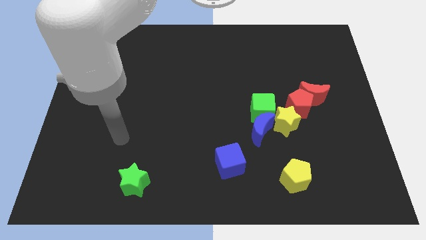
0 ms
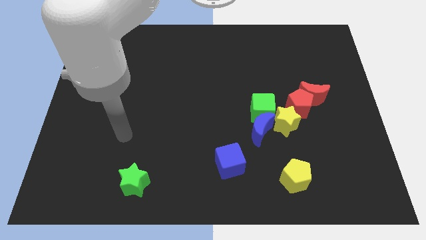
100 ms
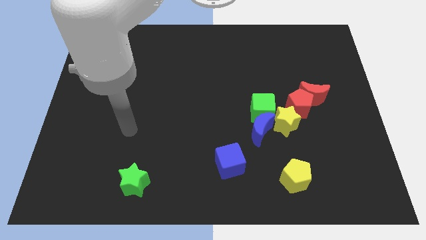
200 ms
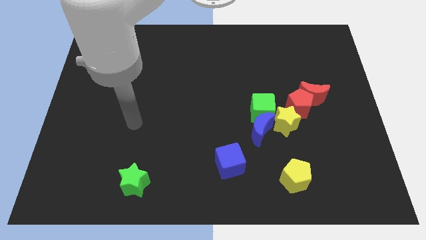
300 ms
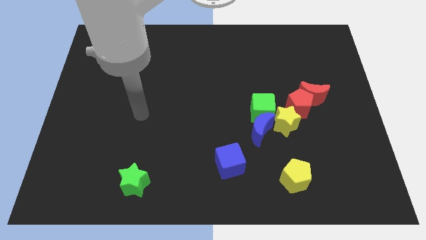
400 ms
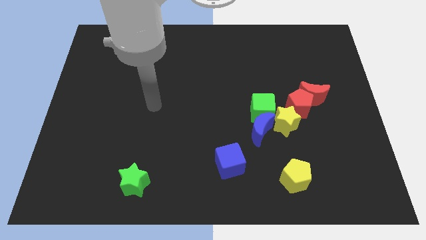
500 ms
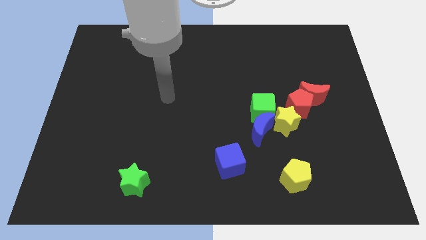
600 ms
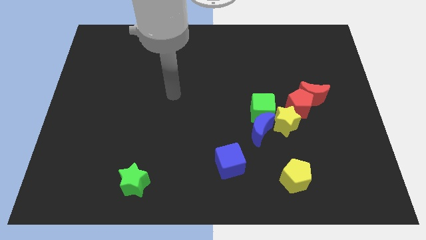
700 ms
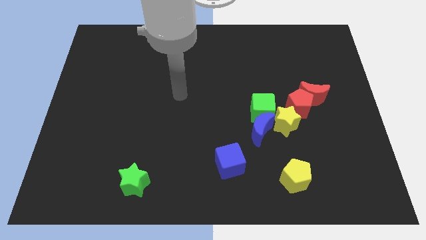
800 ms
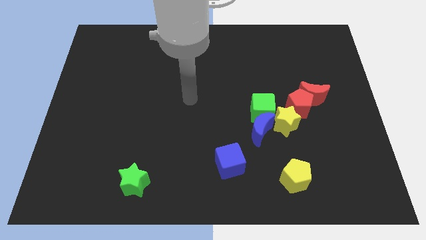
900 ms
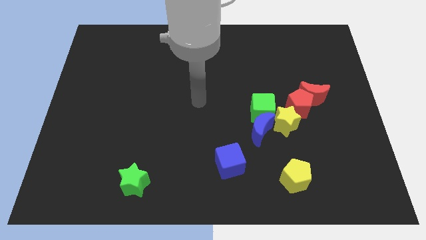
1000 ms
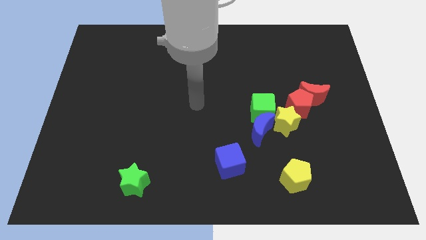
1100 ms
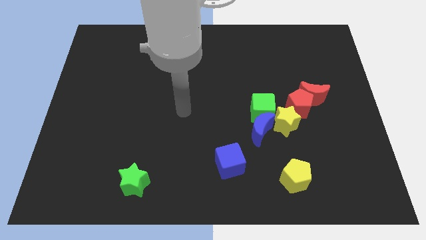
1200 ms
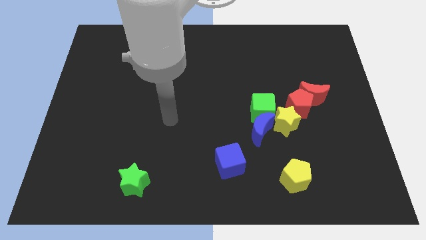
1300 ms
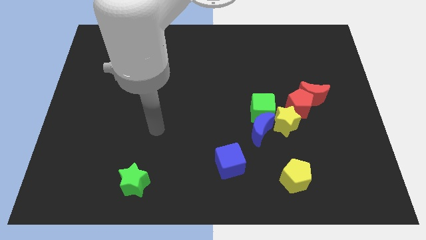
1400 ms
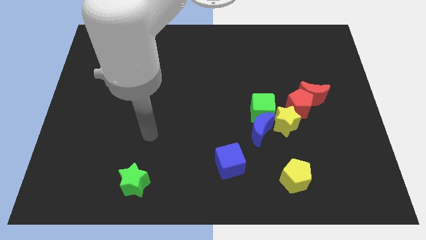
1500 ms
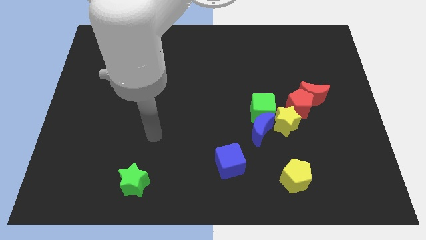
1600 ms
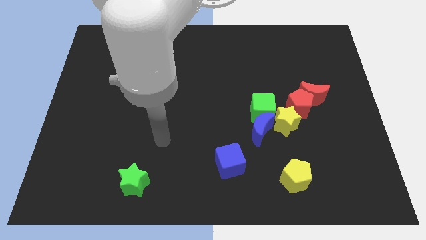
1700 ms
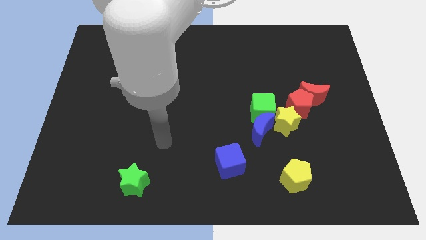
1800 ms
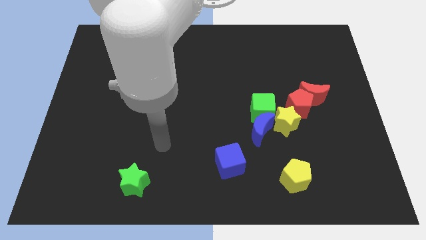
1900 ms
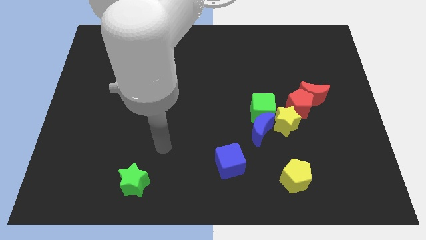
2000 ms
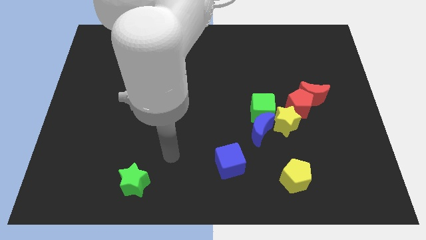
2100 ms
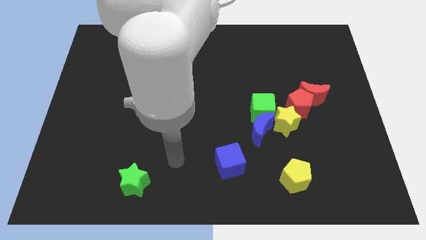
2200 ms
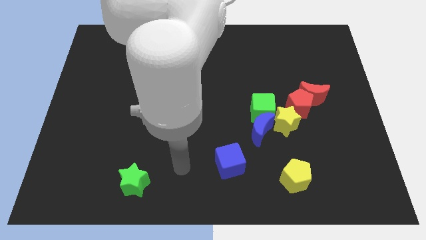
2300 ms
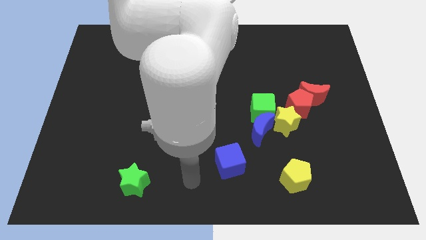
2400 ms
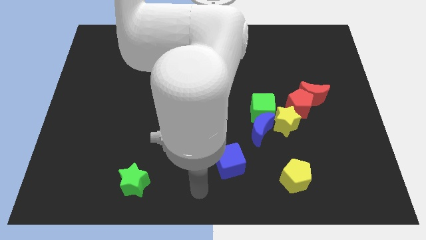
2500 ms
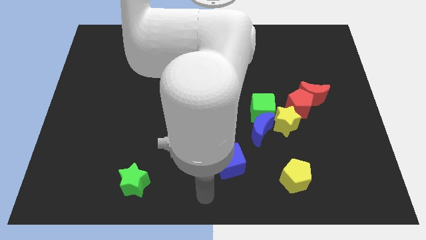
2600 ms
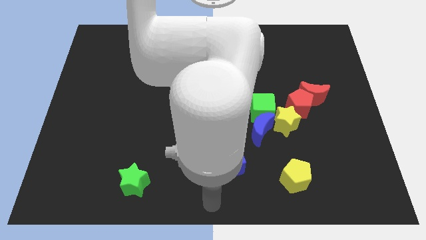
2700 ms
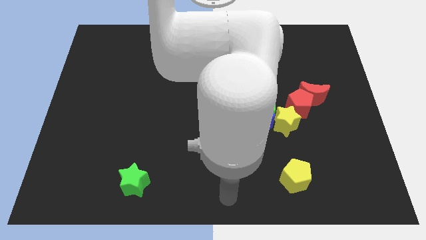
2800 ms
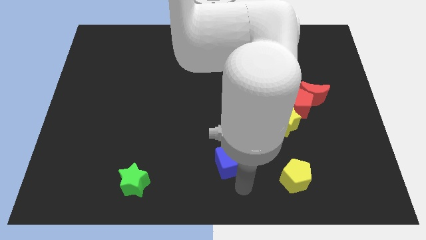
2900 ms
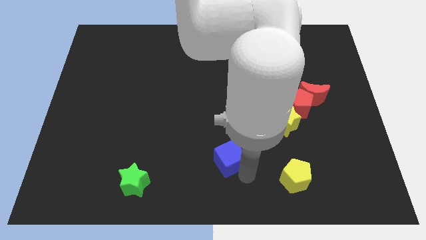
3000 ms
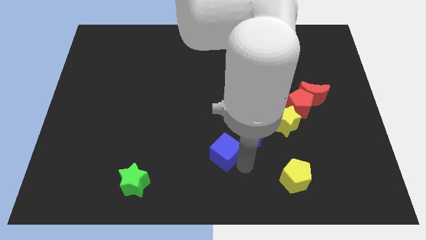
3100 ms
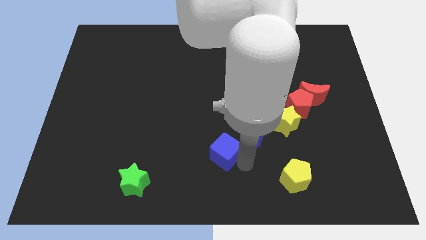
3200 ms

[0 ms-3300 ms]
move arm to the blue cube

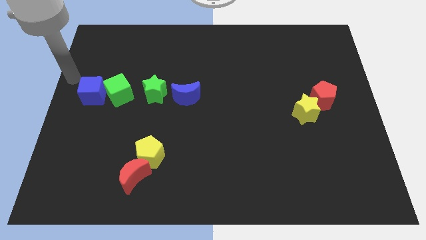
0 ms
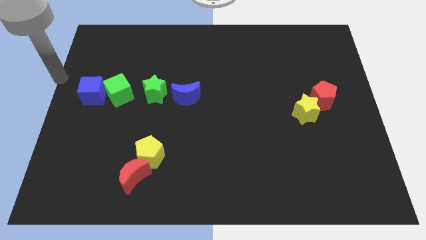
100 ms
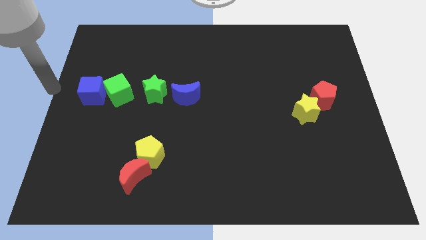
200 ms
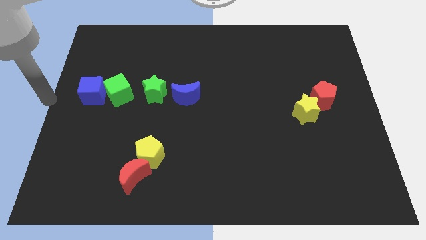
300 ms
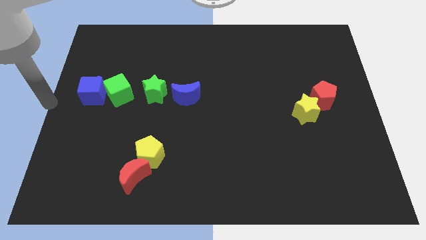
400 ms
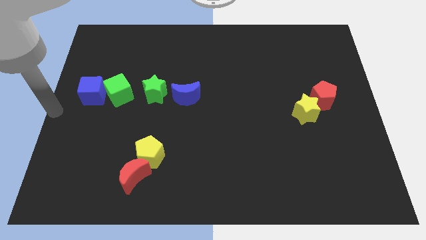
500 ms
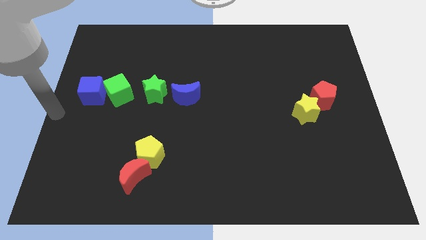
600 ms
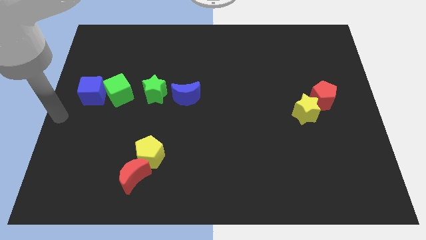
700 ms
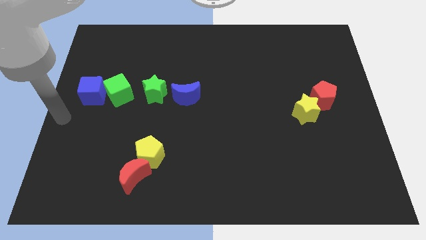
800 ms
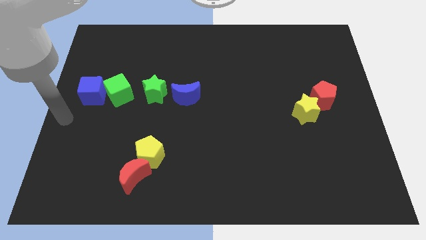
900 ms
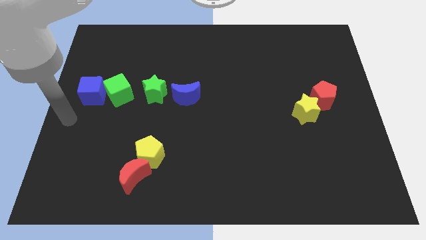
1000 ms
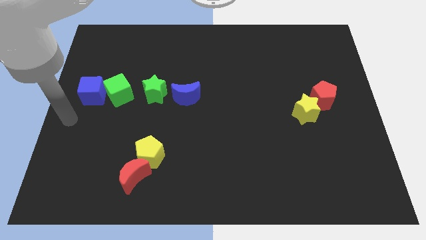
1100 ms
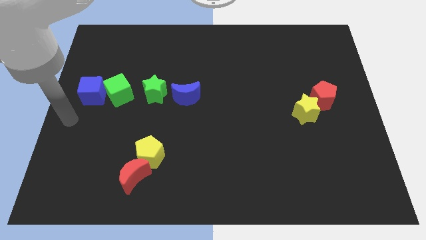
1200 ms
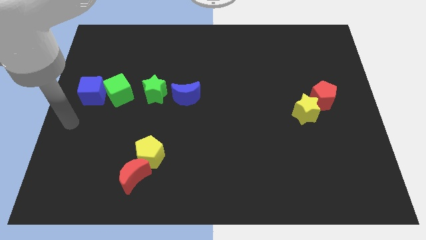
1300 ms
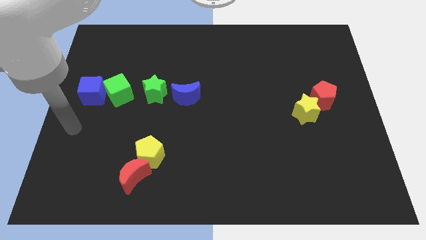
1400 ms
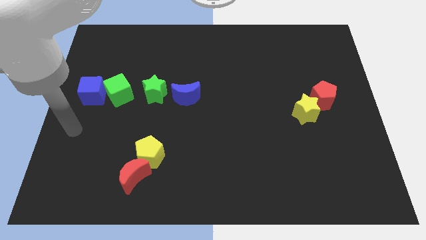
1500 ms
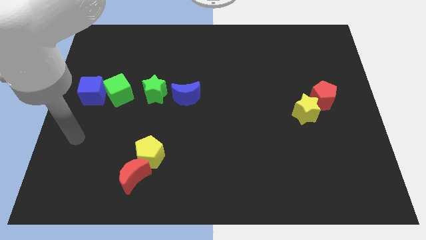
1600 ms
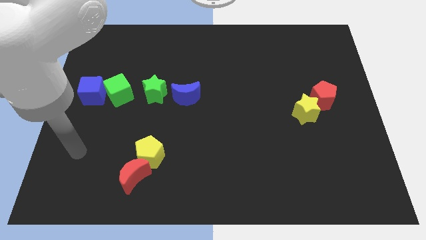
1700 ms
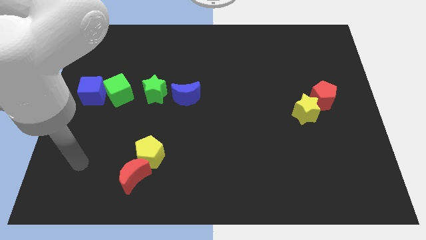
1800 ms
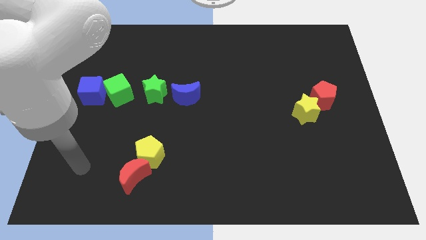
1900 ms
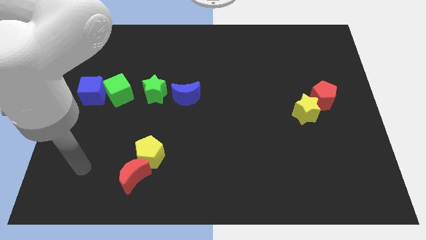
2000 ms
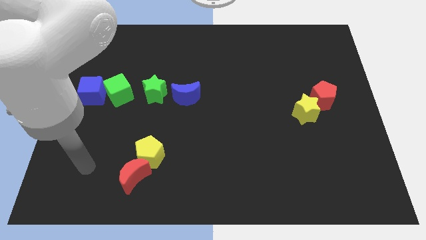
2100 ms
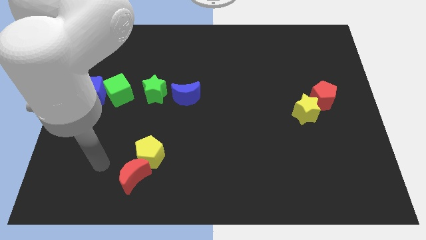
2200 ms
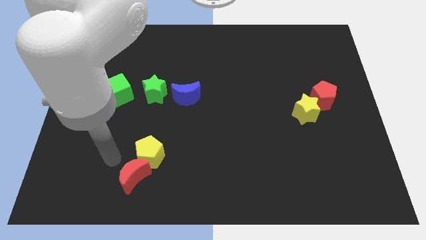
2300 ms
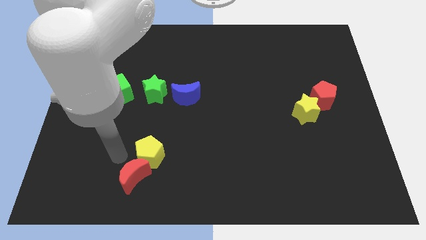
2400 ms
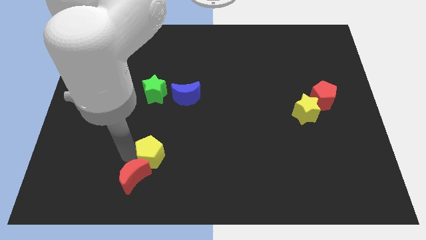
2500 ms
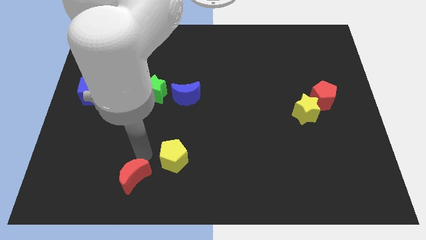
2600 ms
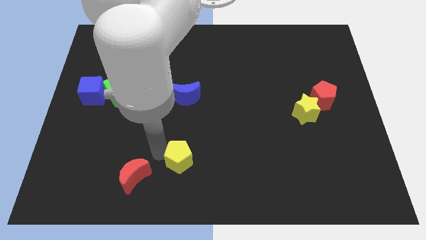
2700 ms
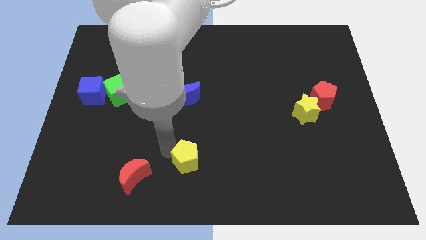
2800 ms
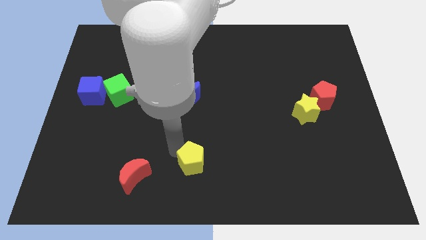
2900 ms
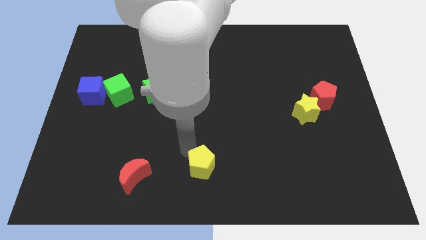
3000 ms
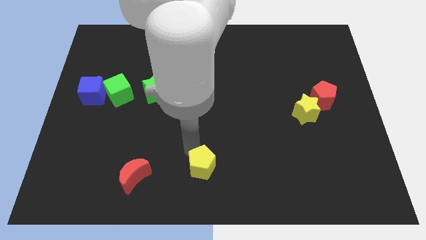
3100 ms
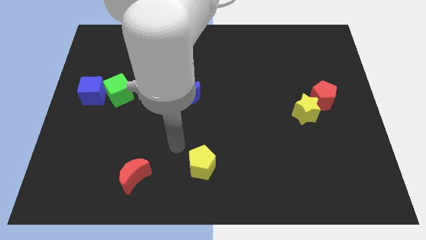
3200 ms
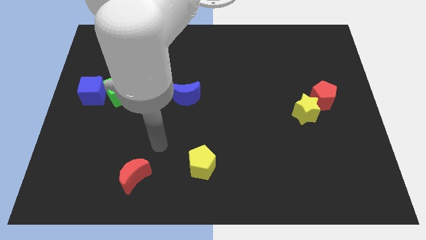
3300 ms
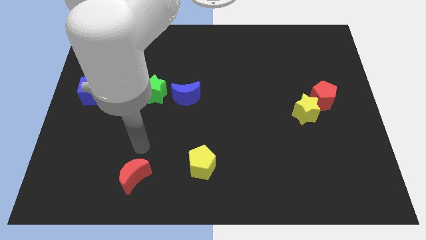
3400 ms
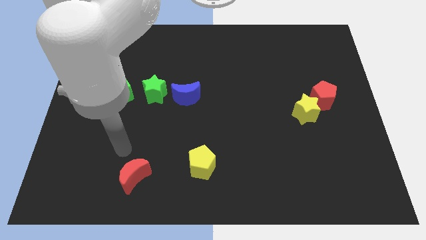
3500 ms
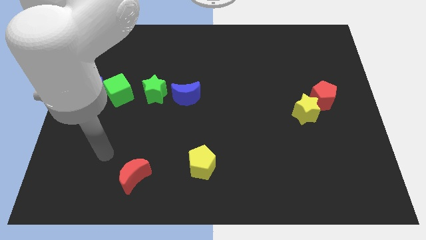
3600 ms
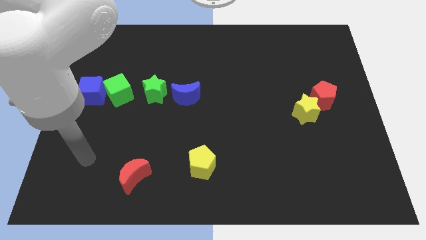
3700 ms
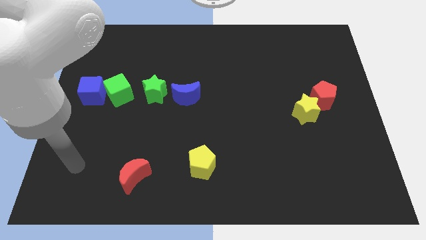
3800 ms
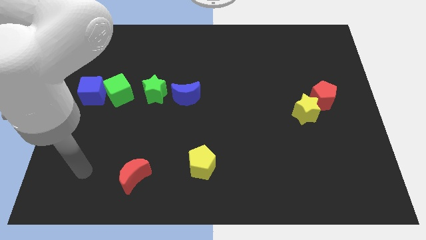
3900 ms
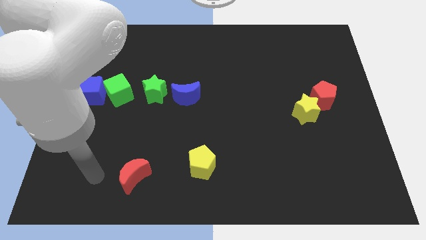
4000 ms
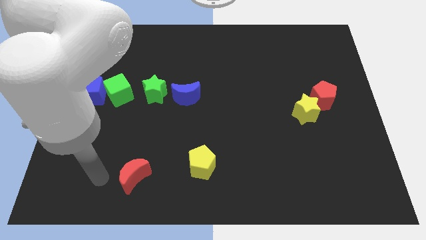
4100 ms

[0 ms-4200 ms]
push the yellow pentagon to the right of the red moon

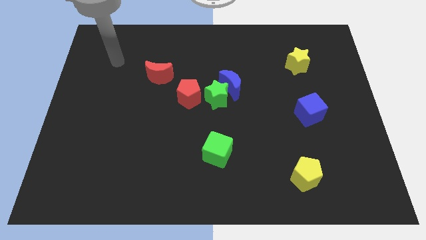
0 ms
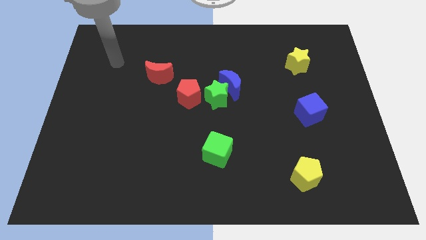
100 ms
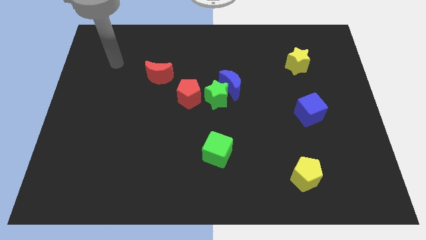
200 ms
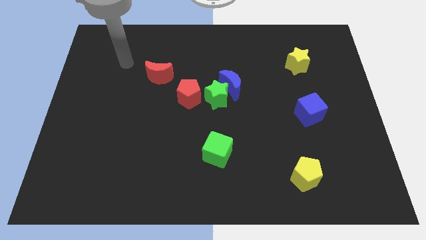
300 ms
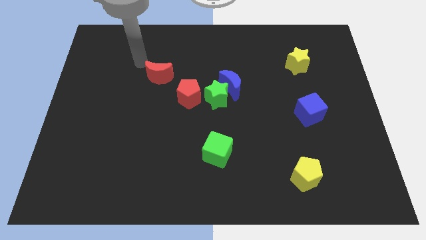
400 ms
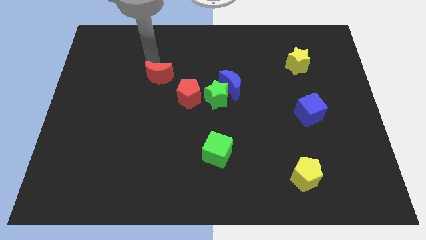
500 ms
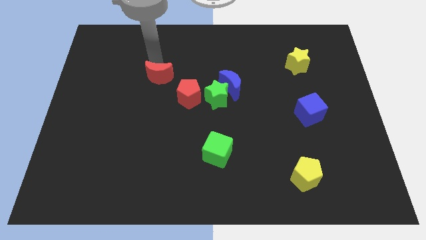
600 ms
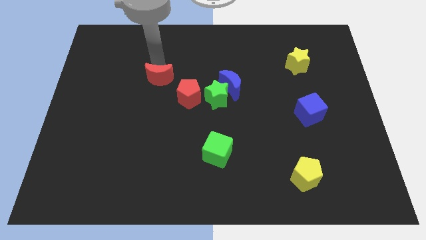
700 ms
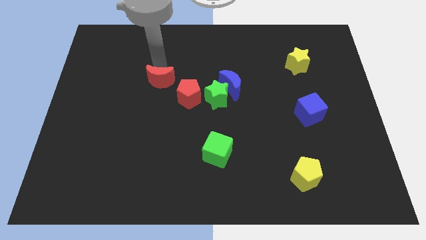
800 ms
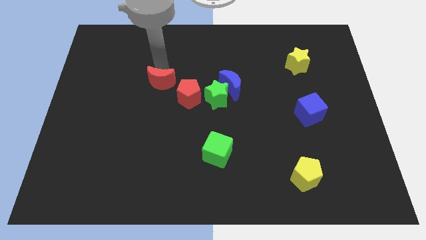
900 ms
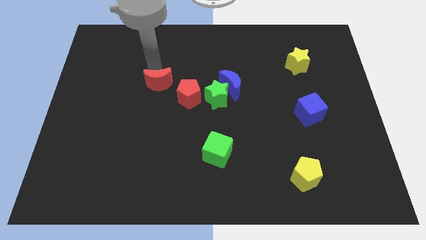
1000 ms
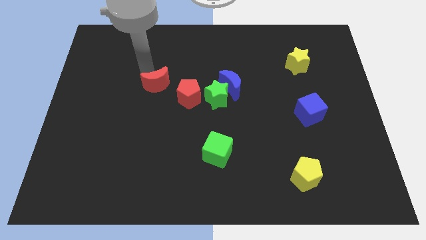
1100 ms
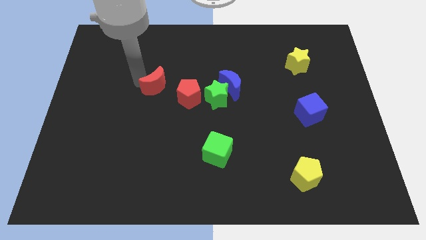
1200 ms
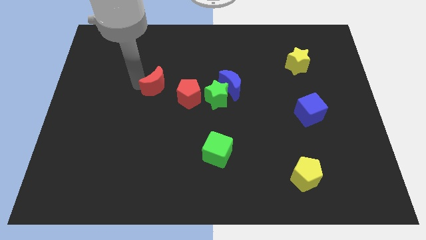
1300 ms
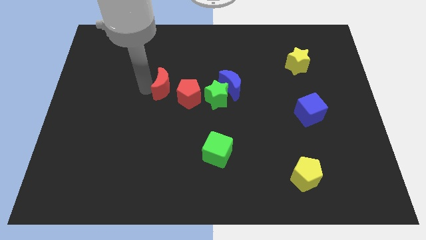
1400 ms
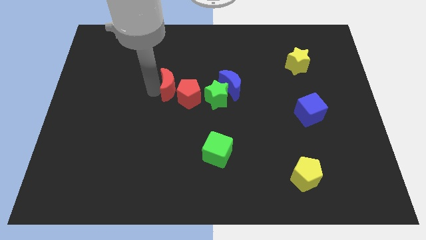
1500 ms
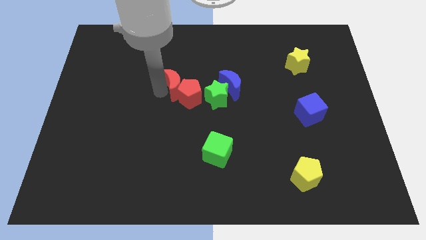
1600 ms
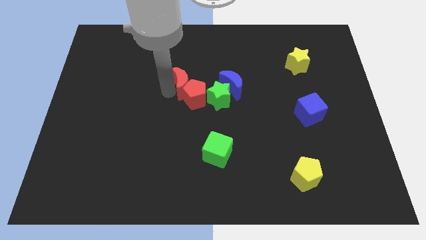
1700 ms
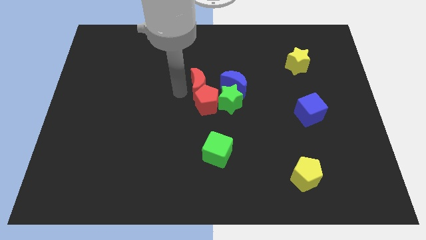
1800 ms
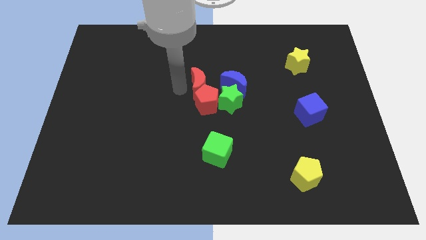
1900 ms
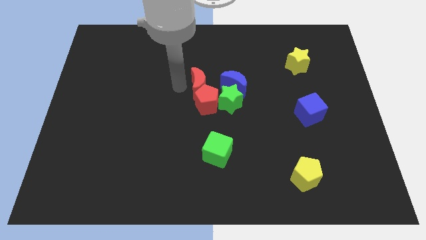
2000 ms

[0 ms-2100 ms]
place red moon to the top left of red pentagon
